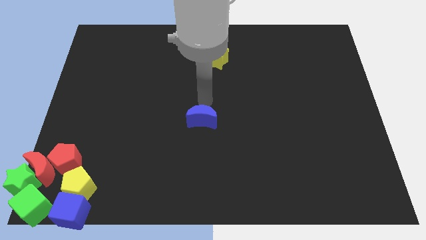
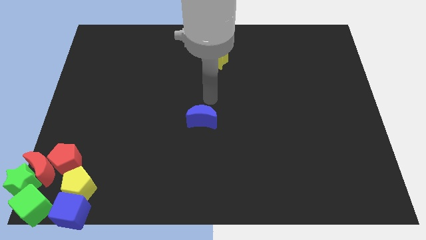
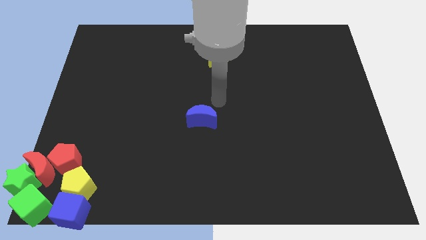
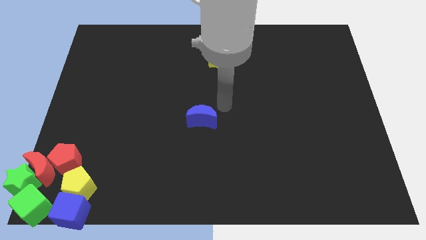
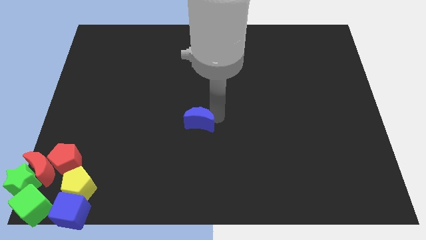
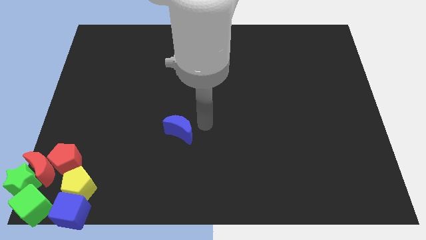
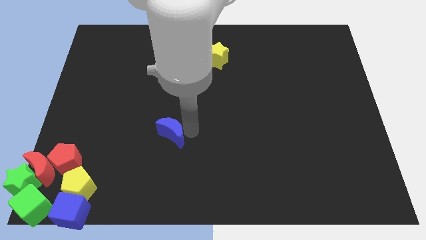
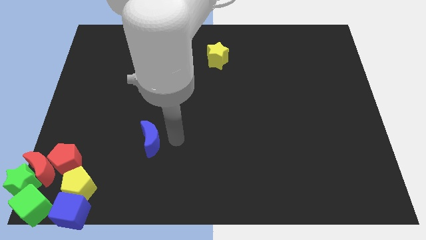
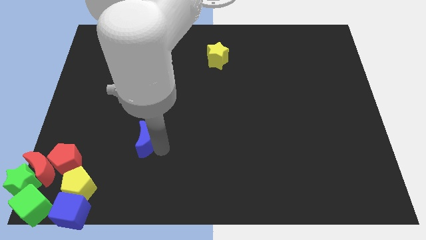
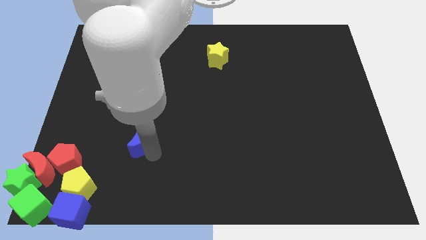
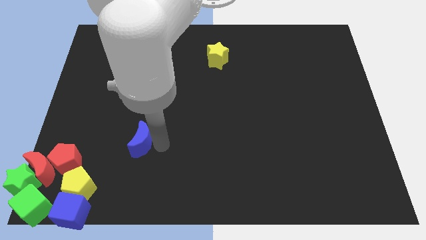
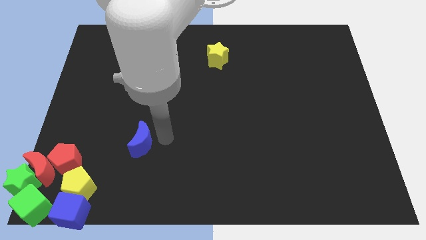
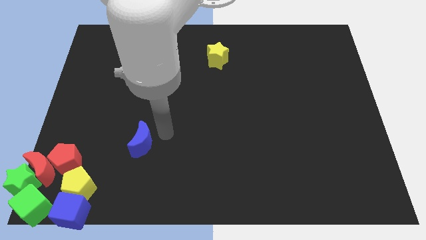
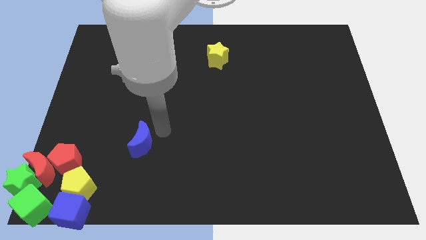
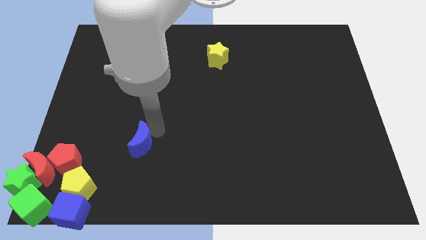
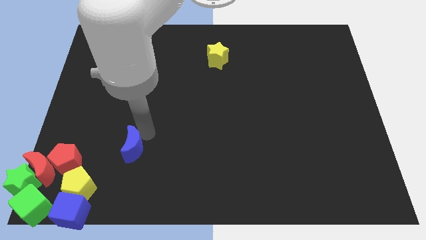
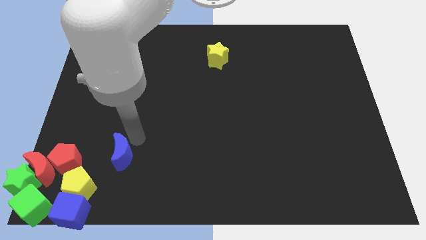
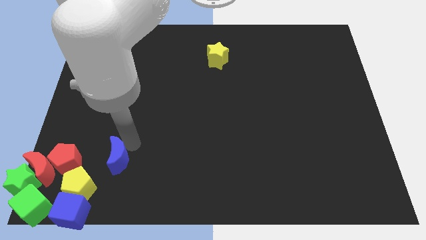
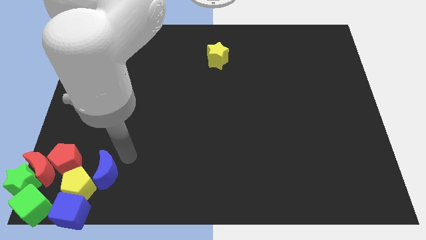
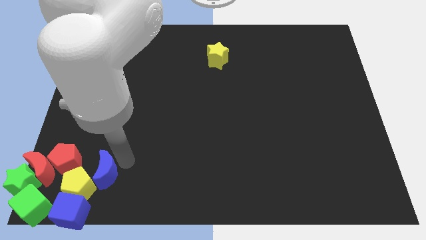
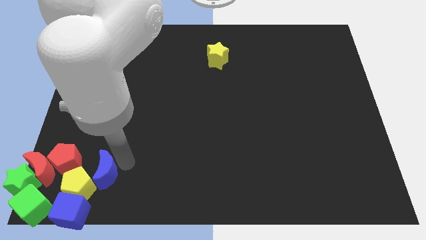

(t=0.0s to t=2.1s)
move blue crescent into yellow pentagon

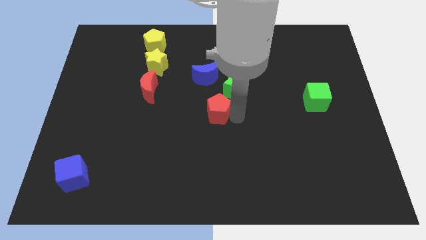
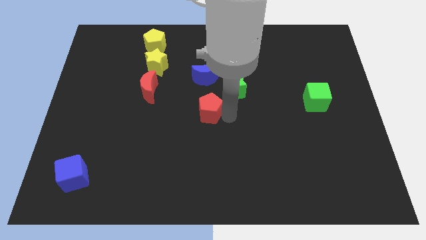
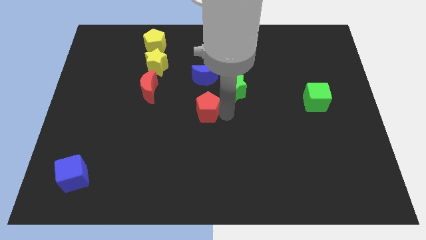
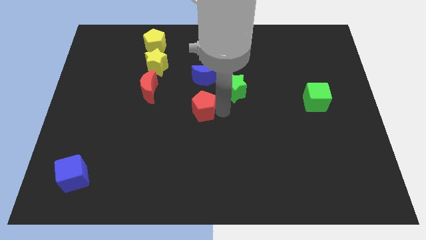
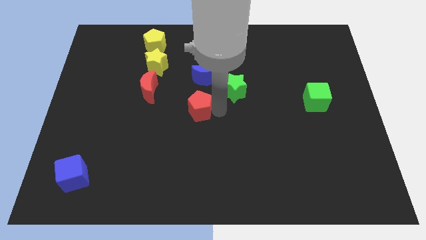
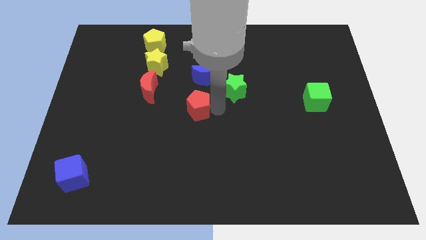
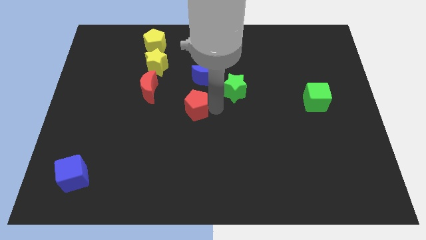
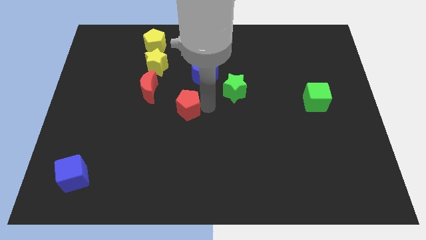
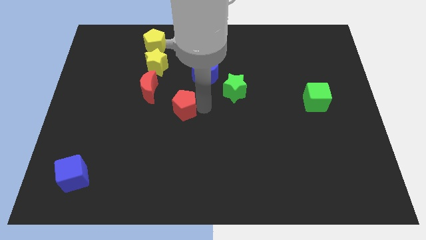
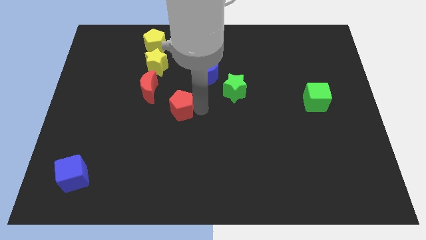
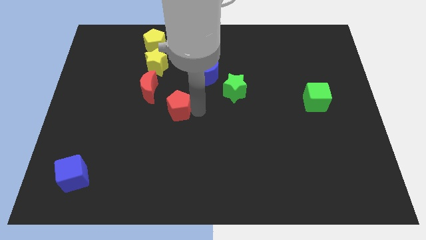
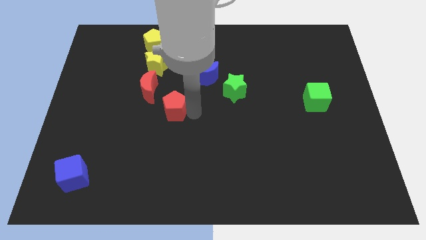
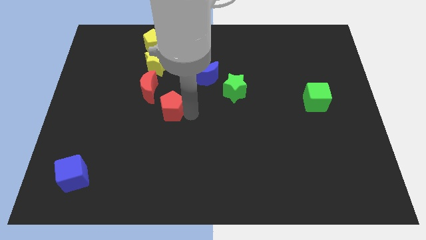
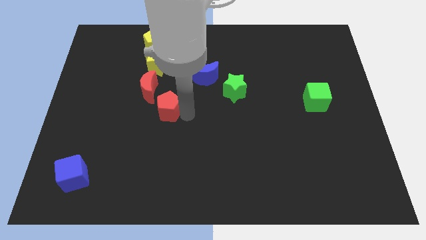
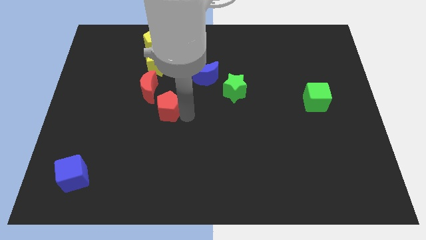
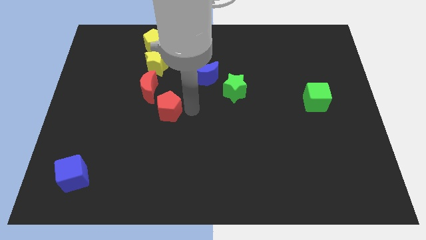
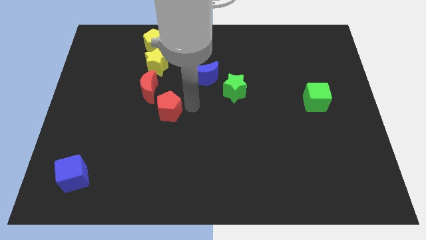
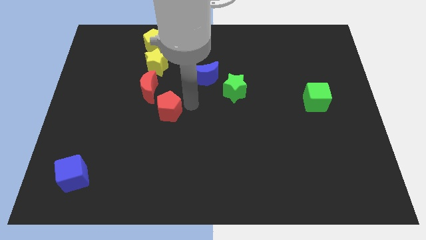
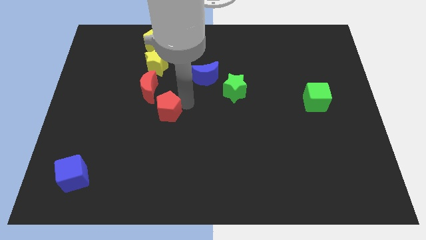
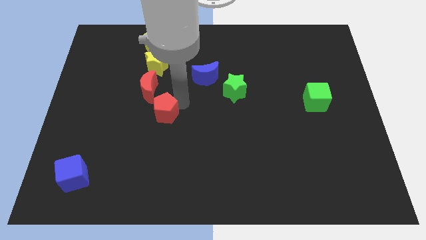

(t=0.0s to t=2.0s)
push the red pentagon towards the left side

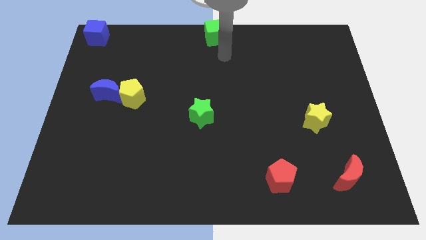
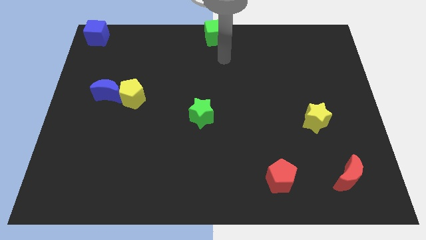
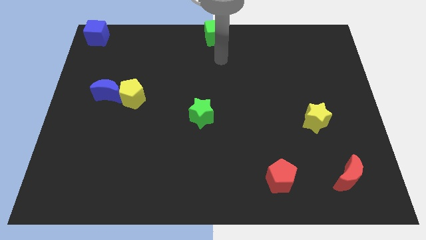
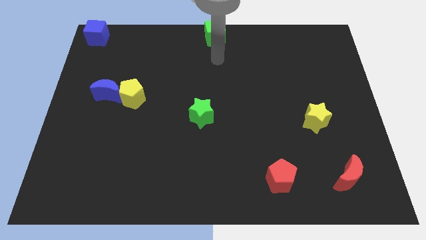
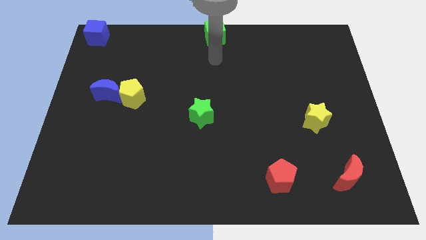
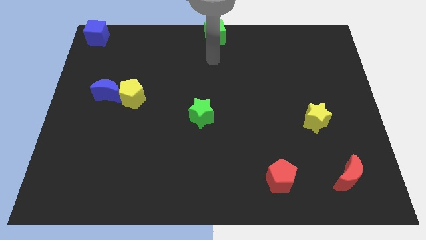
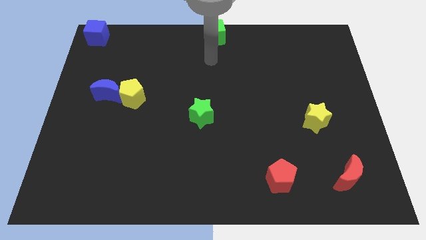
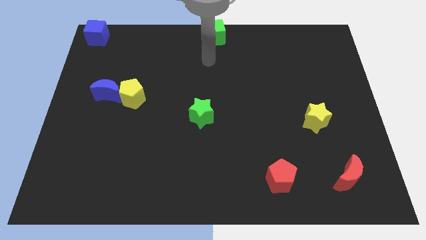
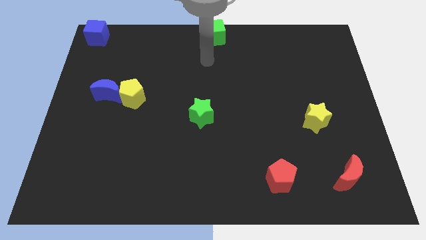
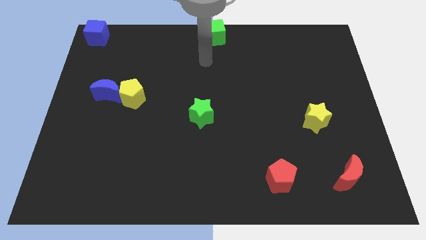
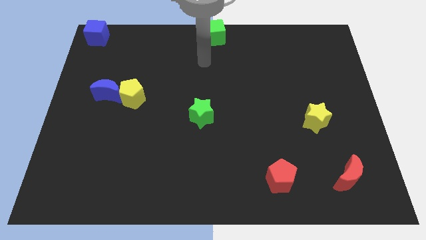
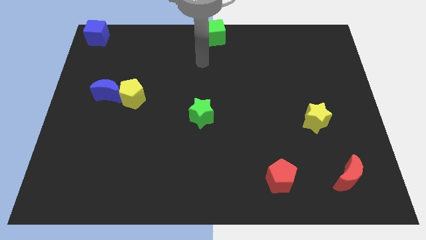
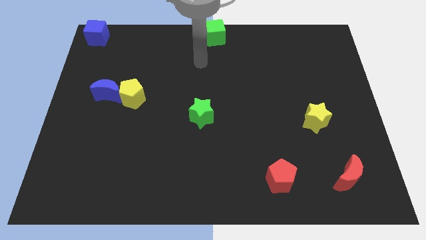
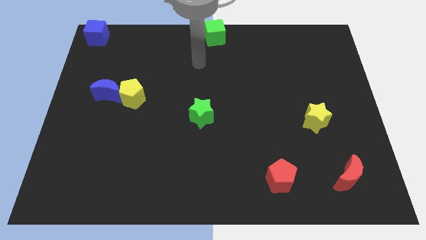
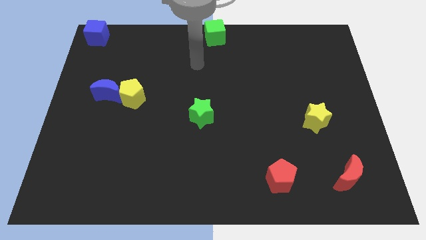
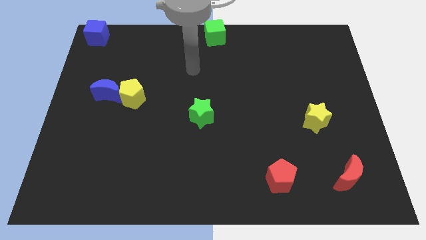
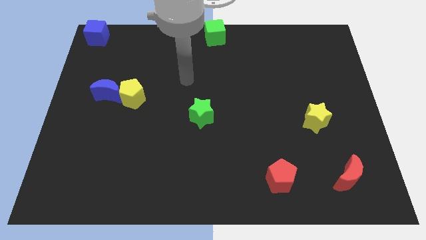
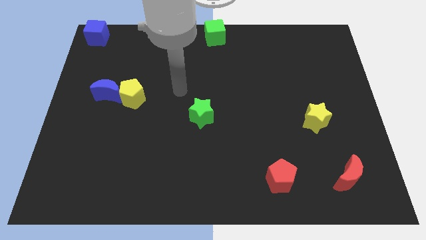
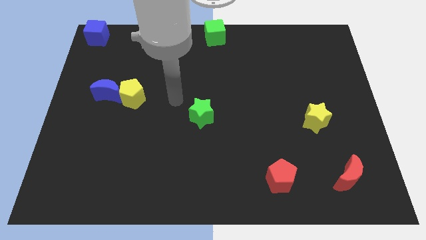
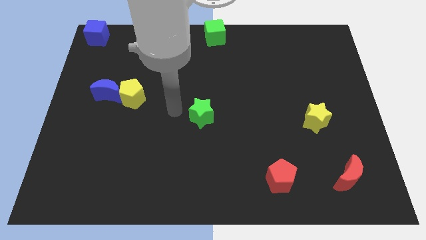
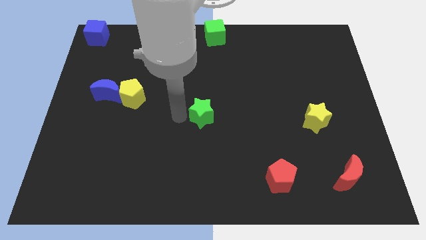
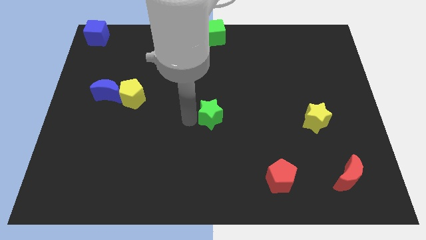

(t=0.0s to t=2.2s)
move your arm to the left side of the green star

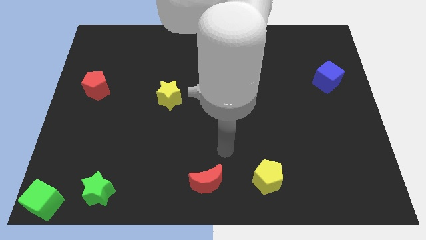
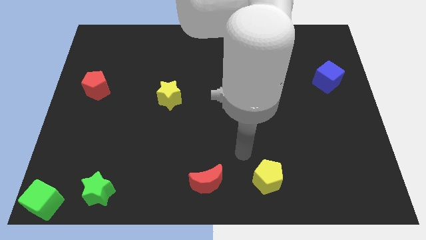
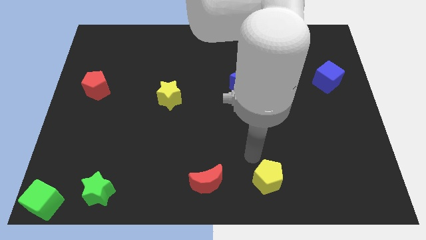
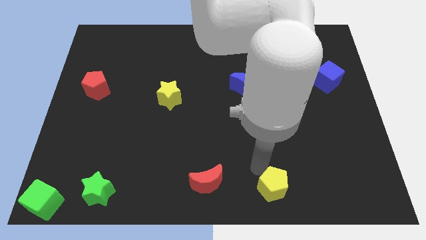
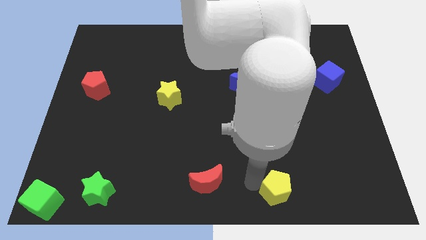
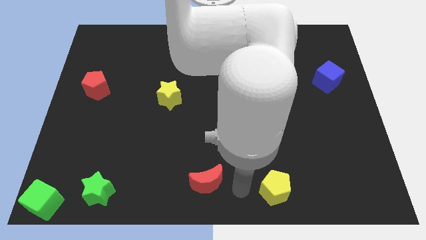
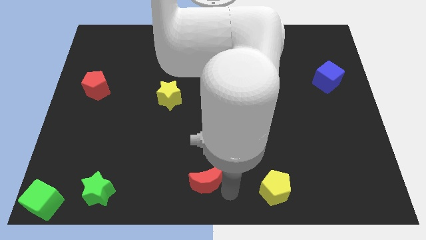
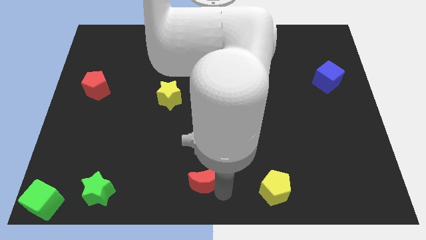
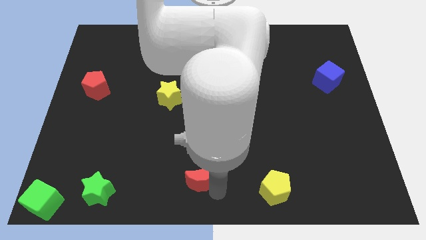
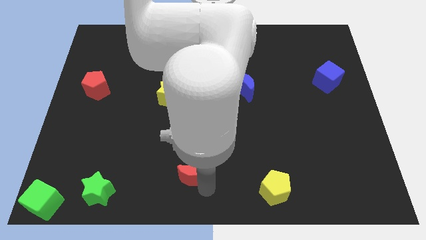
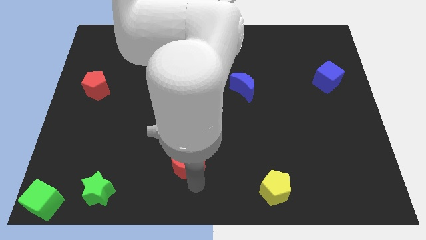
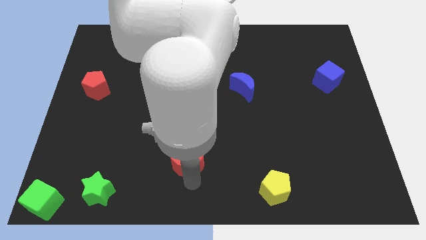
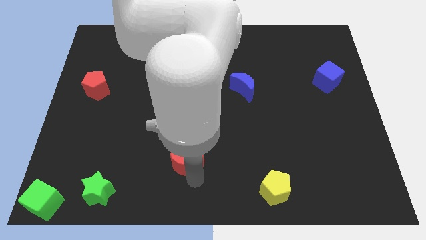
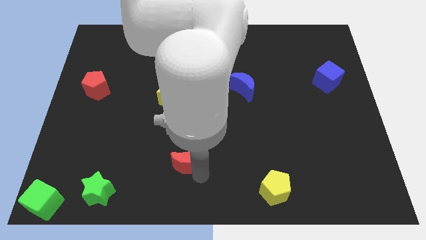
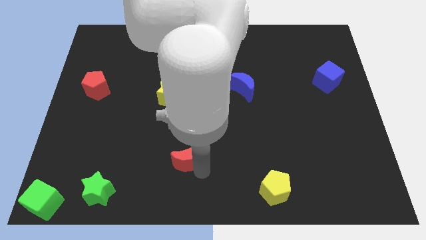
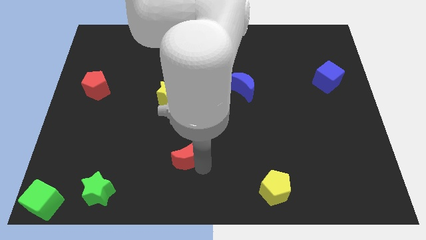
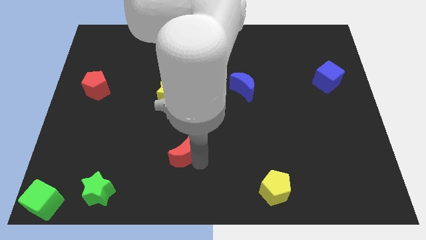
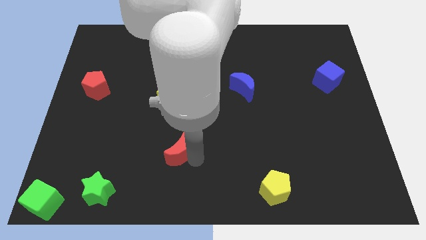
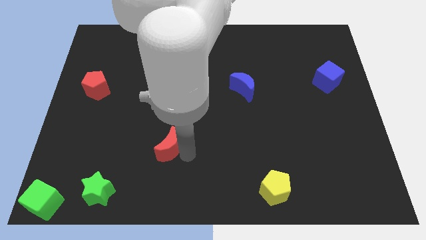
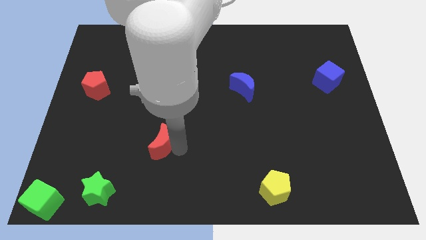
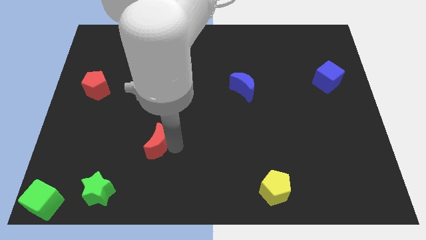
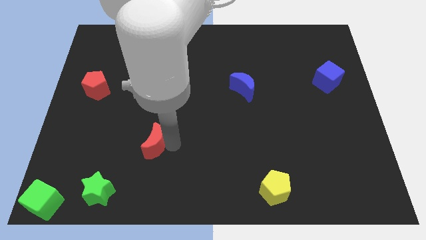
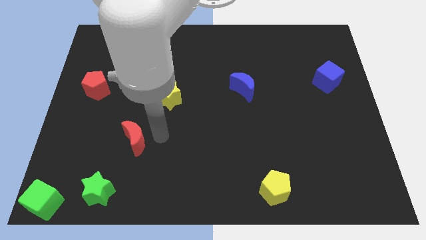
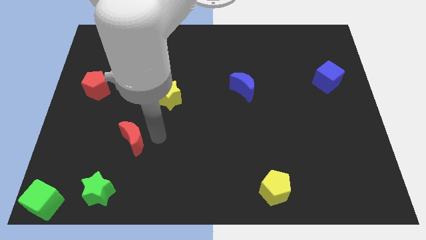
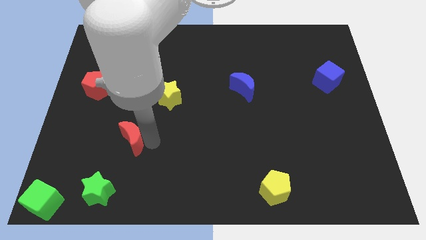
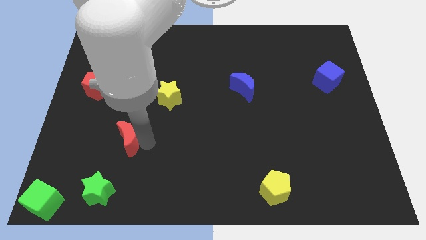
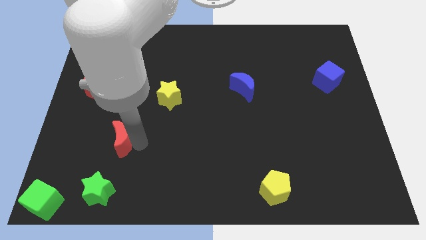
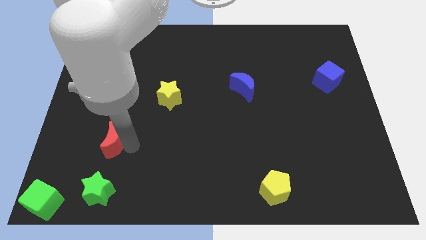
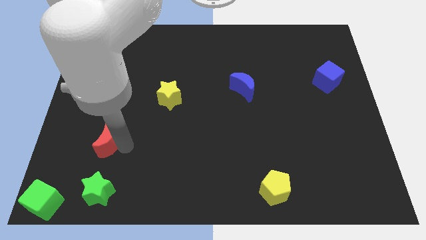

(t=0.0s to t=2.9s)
push red moon vertical to green star
